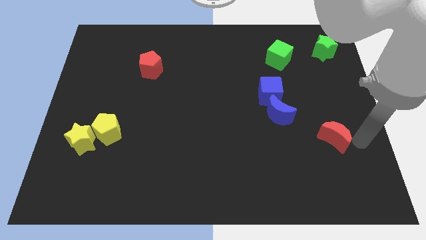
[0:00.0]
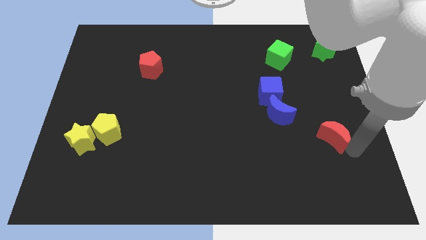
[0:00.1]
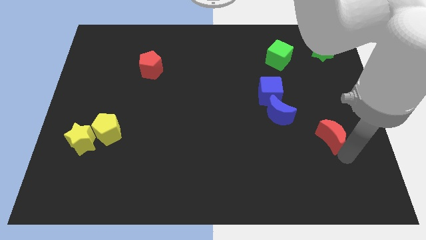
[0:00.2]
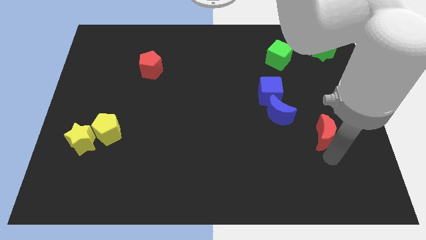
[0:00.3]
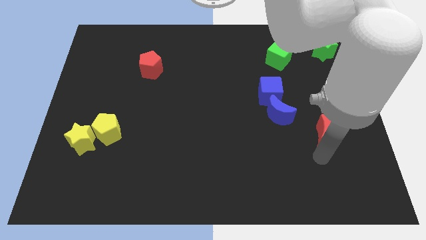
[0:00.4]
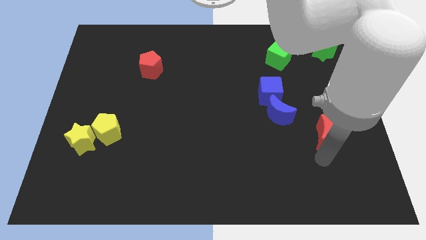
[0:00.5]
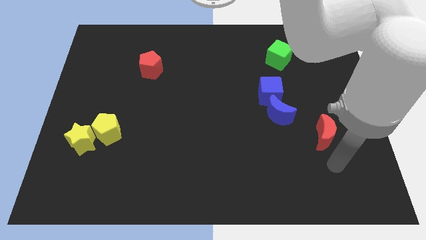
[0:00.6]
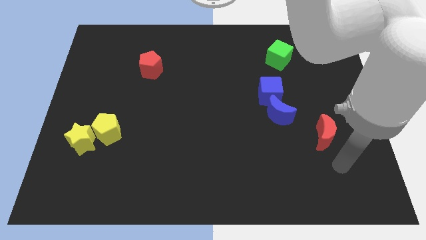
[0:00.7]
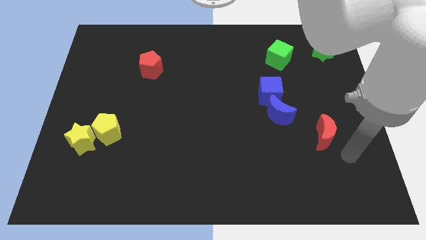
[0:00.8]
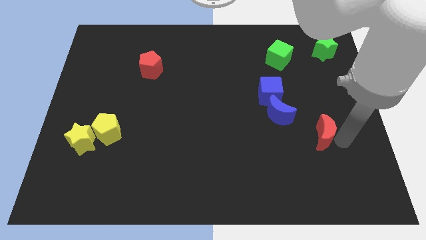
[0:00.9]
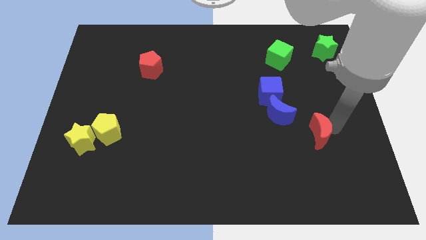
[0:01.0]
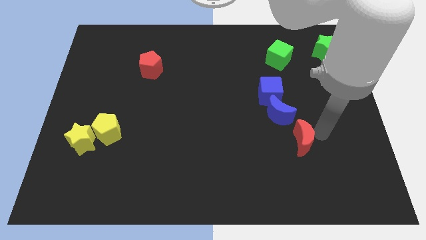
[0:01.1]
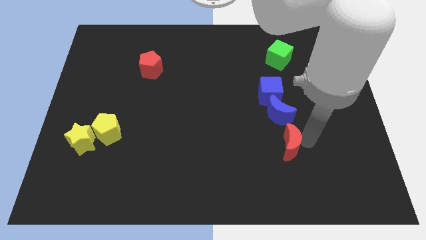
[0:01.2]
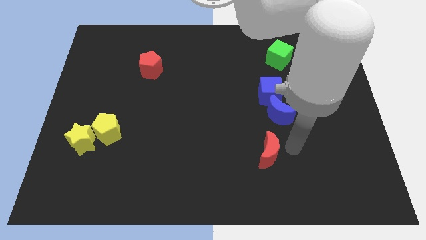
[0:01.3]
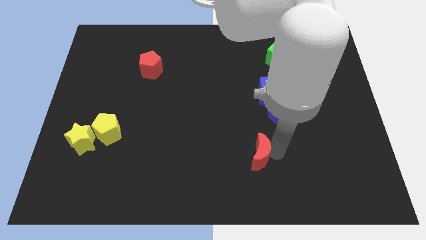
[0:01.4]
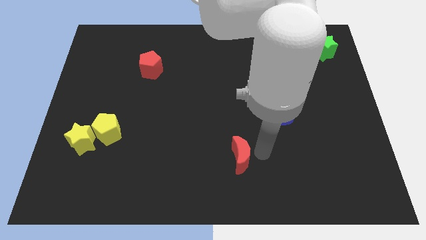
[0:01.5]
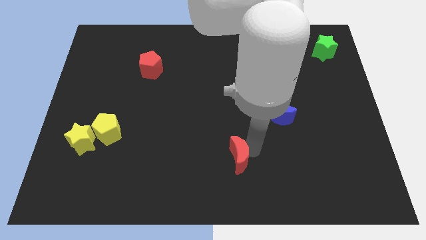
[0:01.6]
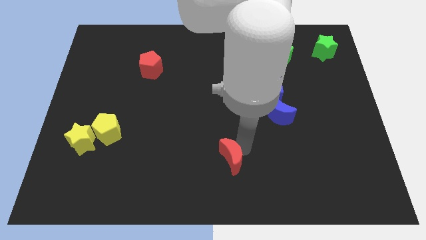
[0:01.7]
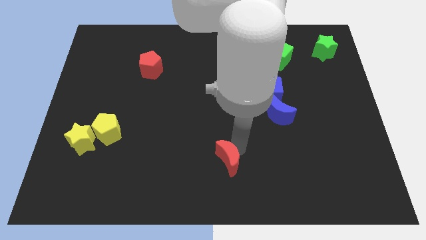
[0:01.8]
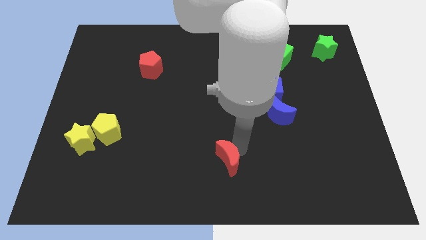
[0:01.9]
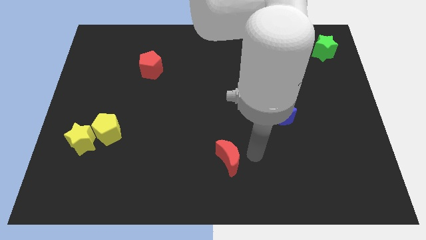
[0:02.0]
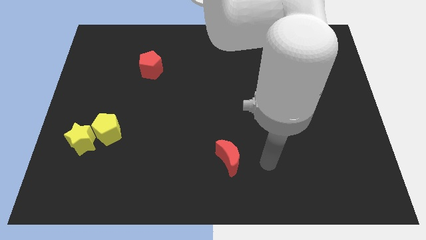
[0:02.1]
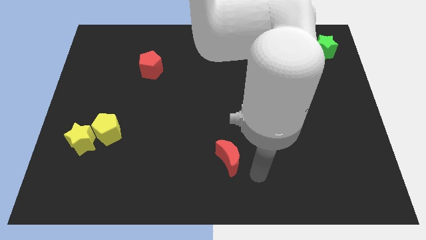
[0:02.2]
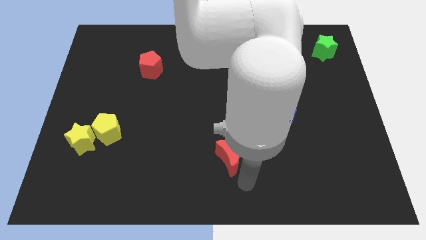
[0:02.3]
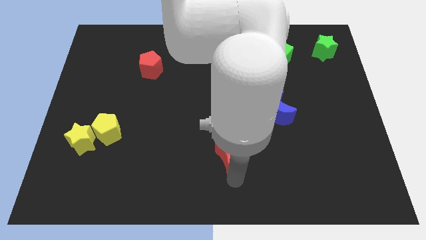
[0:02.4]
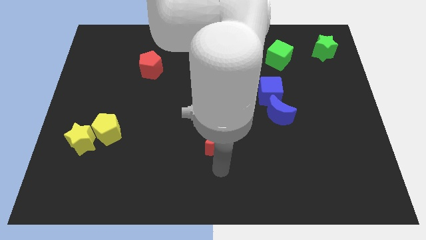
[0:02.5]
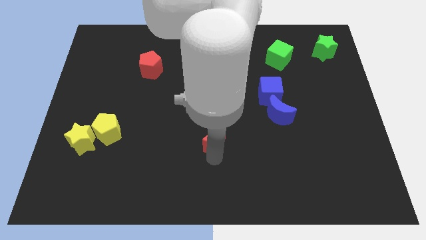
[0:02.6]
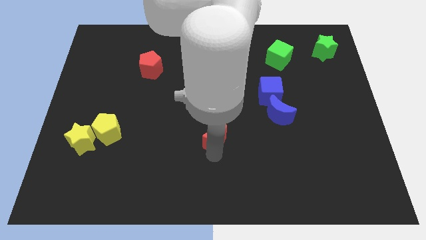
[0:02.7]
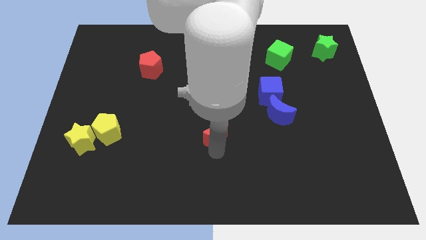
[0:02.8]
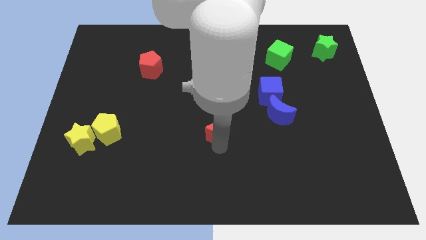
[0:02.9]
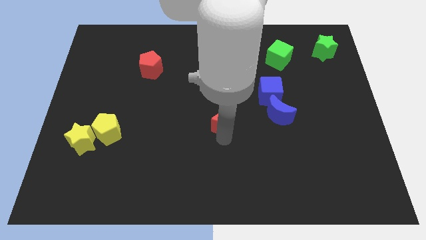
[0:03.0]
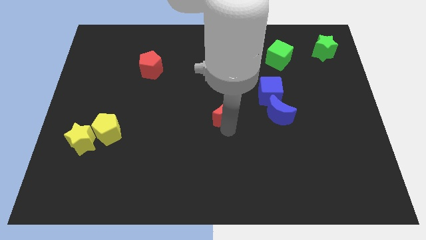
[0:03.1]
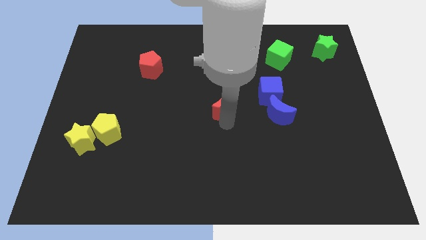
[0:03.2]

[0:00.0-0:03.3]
push the red crescent to the left of the blue crescent

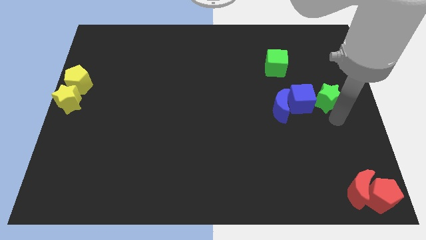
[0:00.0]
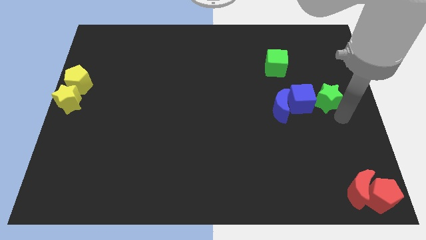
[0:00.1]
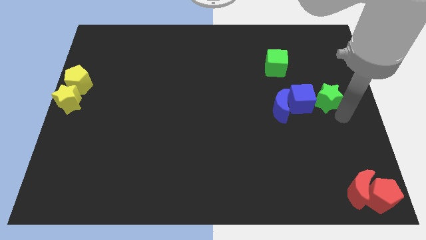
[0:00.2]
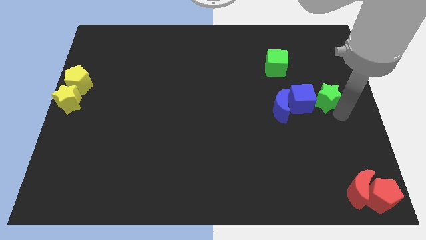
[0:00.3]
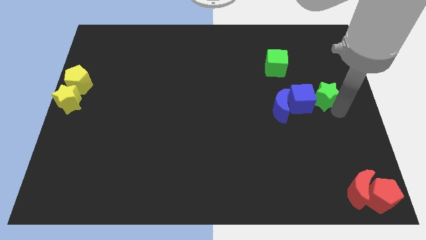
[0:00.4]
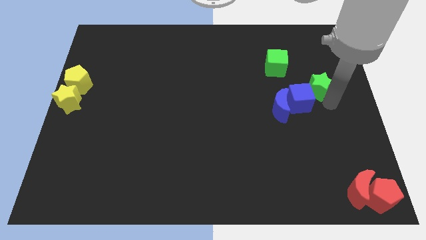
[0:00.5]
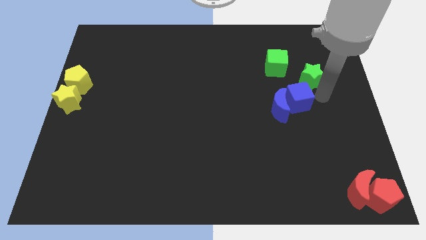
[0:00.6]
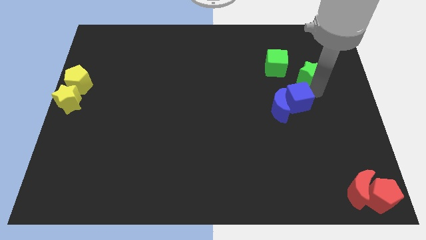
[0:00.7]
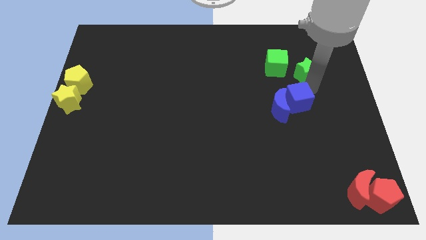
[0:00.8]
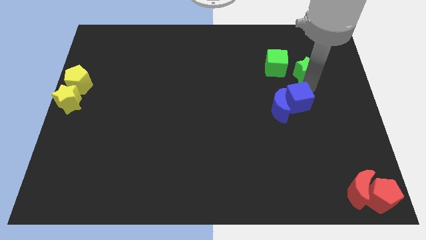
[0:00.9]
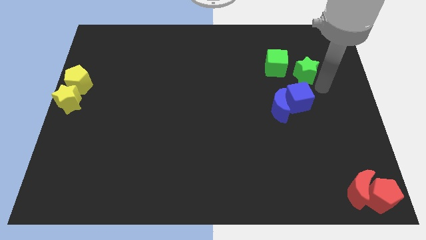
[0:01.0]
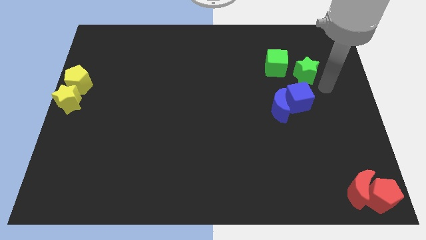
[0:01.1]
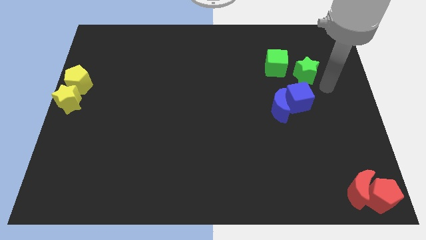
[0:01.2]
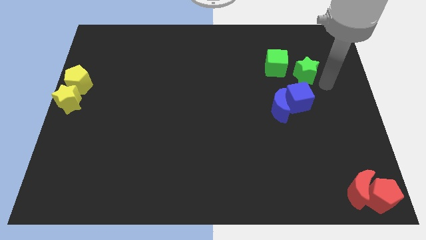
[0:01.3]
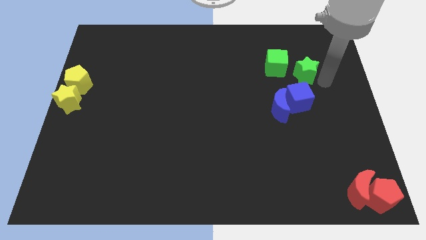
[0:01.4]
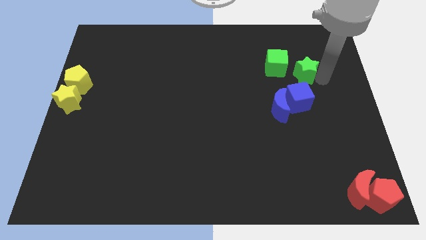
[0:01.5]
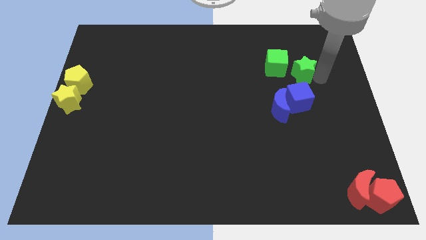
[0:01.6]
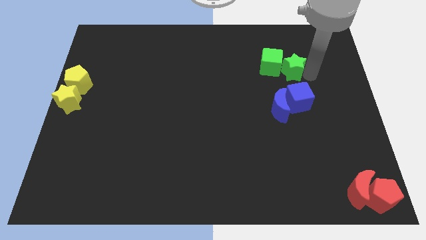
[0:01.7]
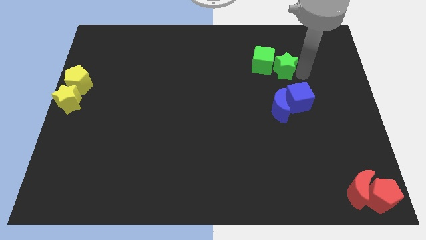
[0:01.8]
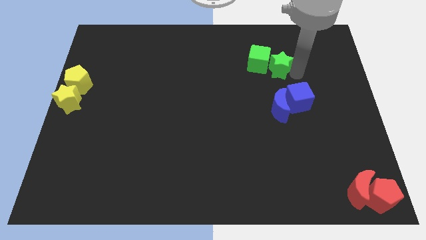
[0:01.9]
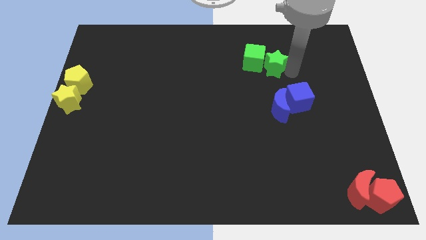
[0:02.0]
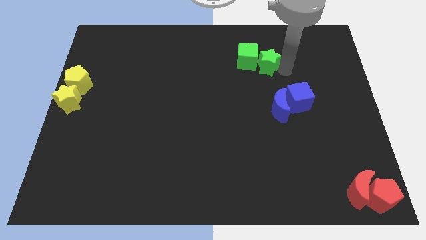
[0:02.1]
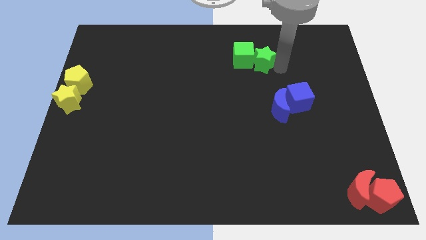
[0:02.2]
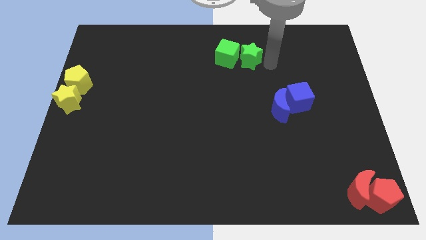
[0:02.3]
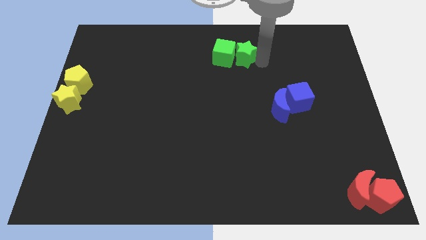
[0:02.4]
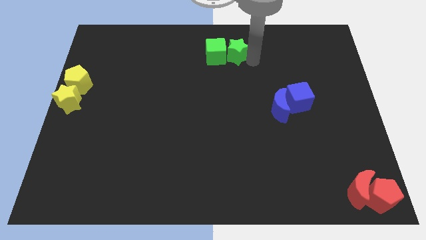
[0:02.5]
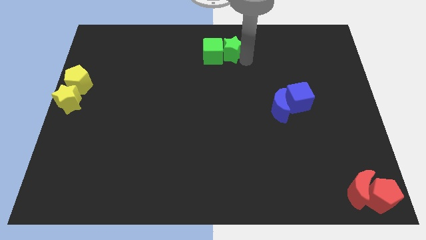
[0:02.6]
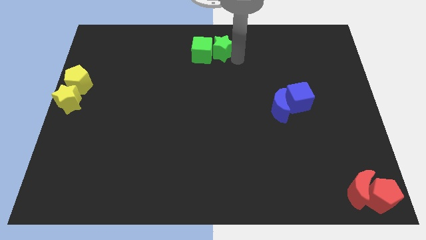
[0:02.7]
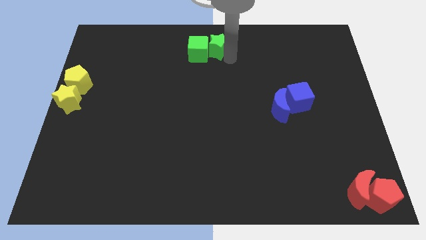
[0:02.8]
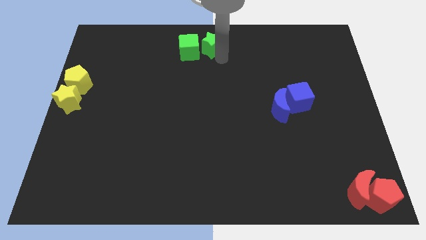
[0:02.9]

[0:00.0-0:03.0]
push the green cube with the green star to the top center of the board

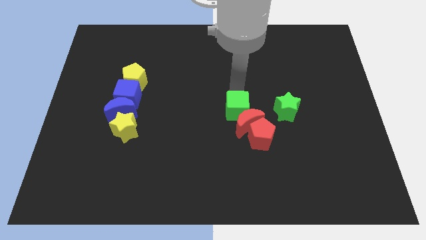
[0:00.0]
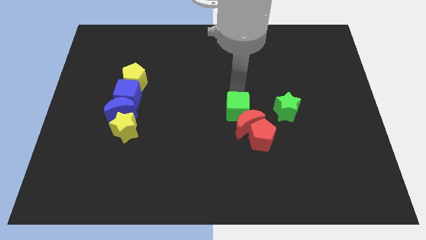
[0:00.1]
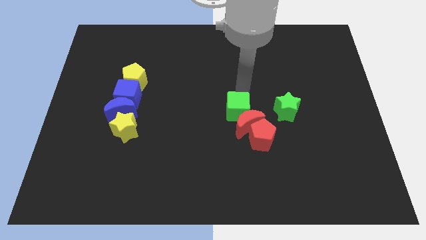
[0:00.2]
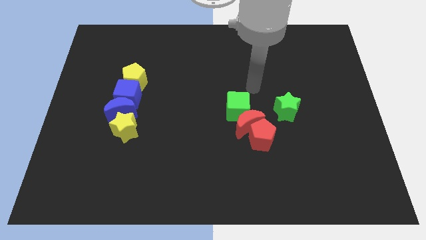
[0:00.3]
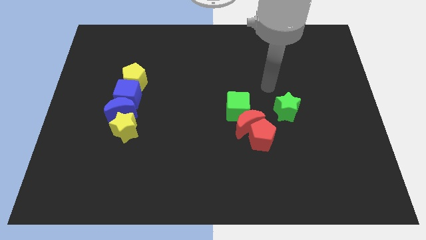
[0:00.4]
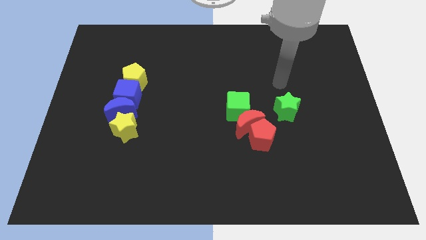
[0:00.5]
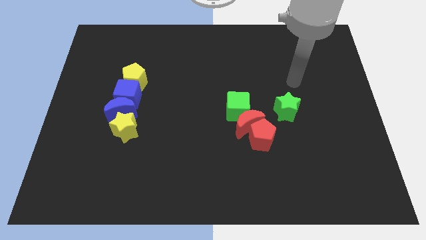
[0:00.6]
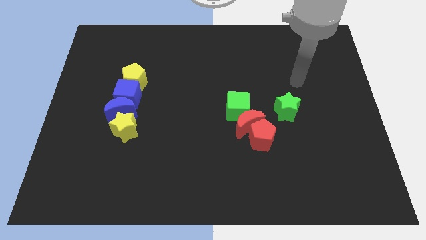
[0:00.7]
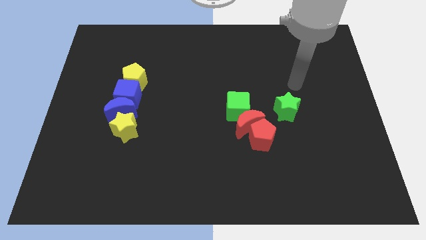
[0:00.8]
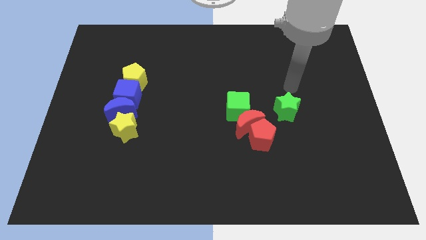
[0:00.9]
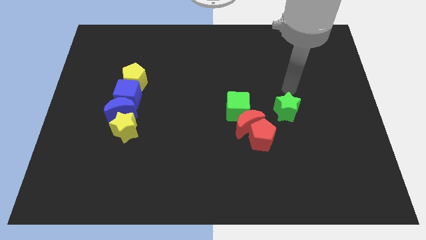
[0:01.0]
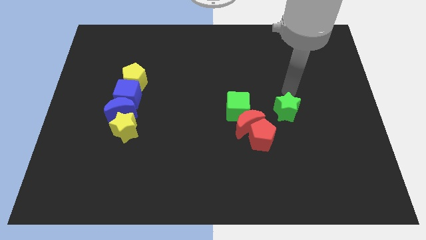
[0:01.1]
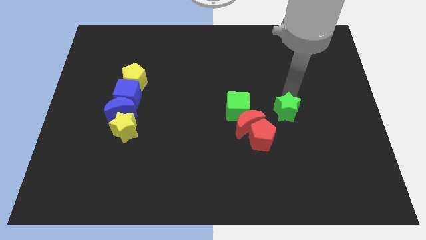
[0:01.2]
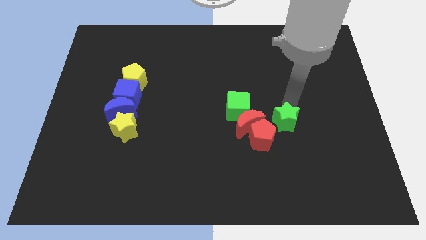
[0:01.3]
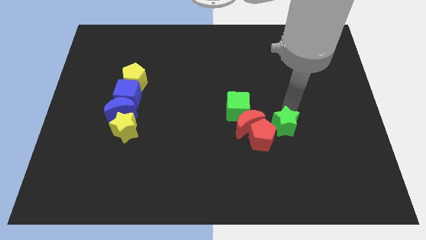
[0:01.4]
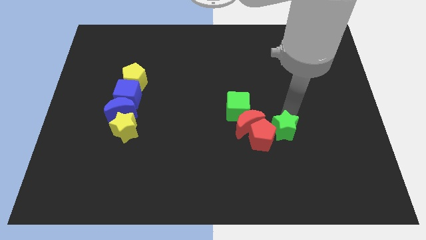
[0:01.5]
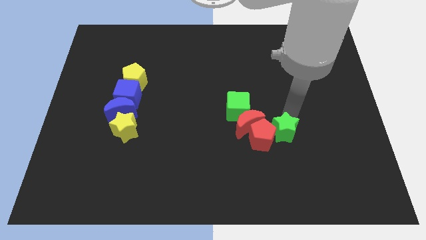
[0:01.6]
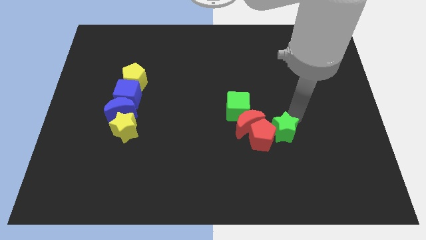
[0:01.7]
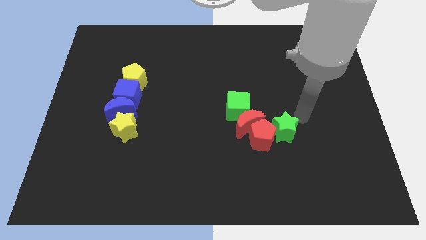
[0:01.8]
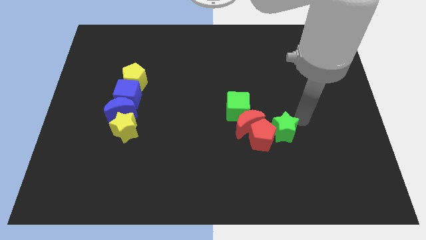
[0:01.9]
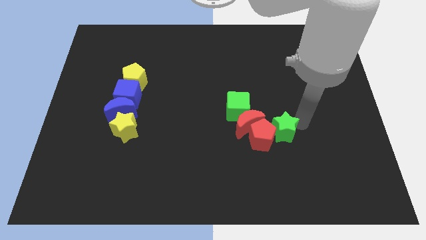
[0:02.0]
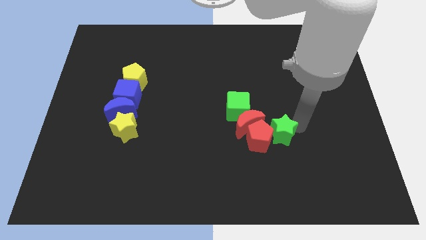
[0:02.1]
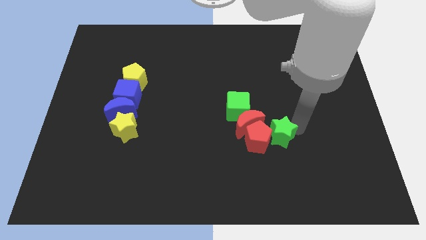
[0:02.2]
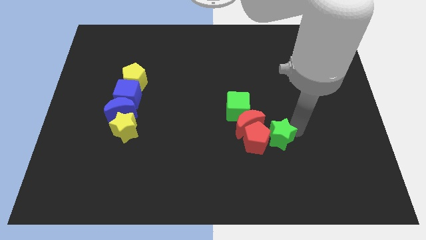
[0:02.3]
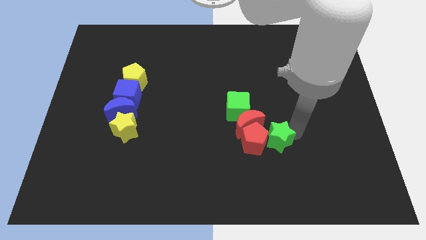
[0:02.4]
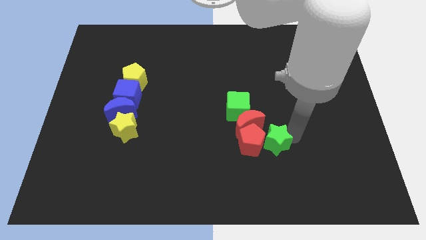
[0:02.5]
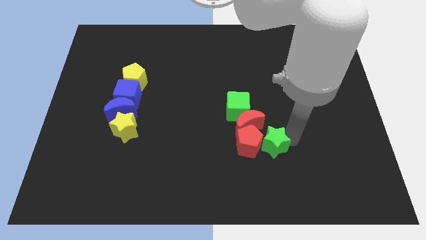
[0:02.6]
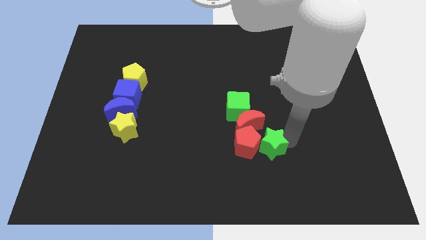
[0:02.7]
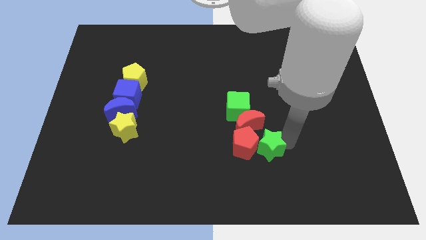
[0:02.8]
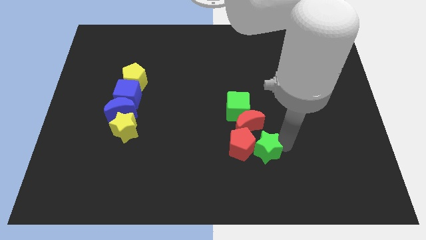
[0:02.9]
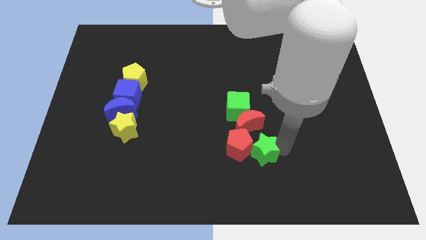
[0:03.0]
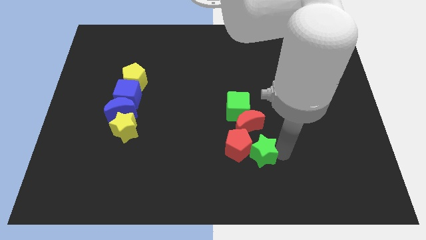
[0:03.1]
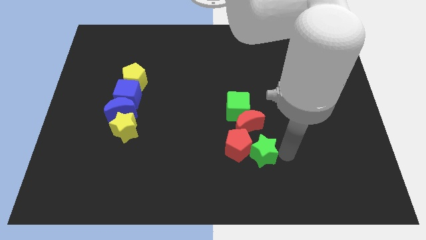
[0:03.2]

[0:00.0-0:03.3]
push the green star into the right side of the red pentagon
